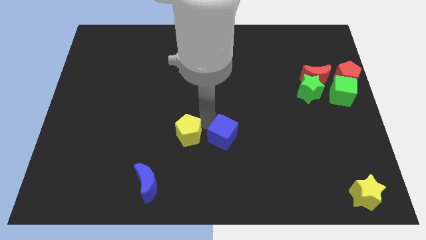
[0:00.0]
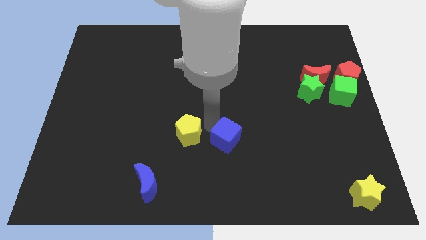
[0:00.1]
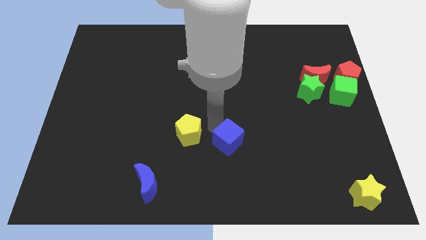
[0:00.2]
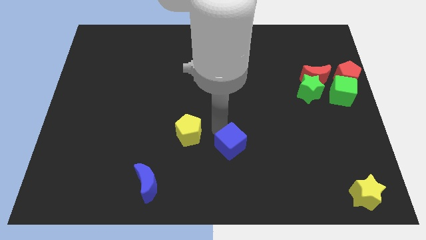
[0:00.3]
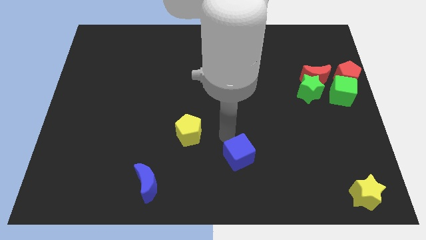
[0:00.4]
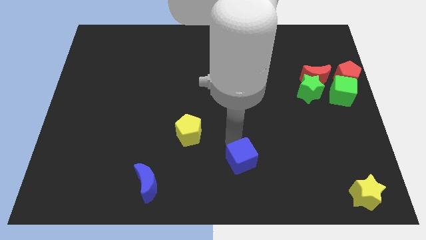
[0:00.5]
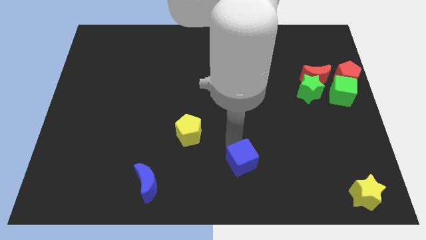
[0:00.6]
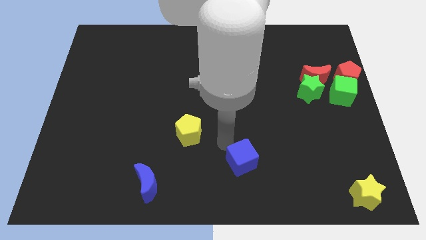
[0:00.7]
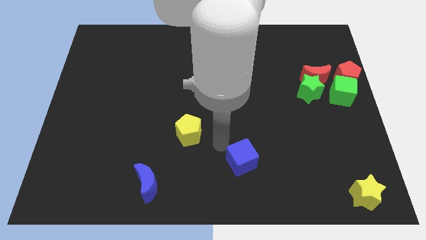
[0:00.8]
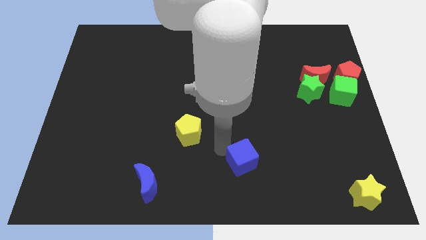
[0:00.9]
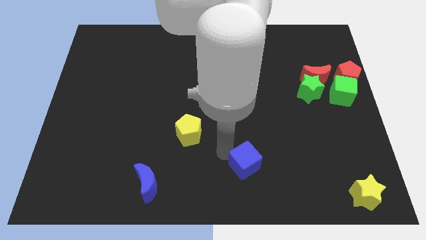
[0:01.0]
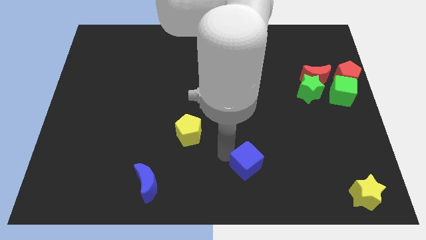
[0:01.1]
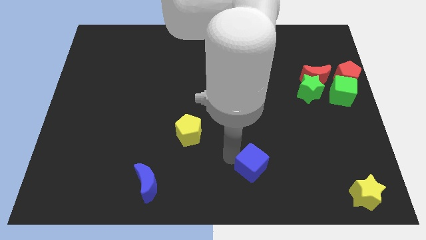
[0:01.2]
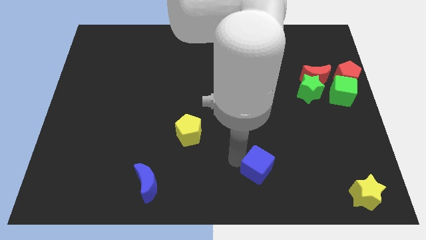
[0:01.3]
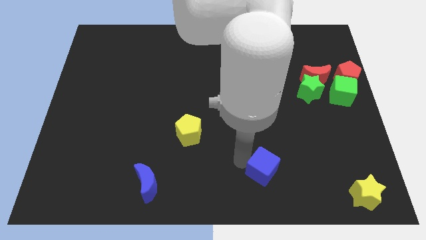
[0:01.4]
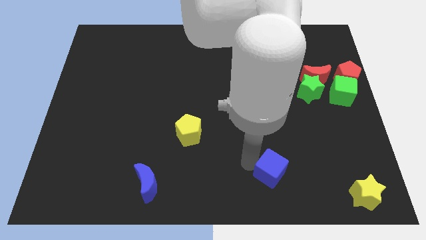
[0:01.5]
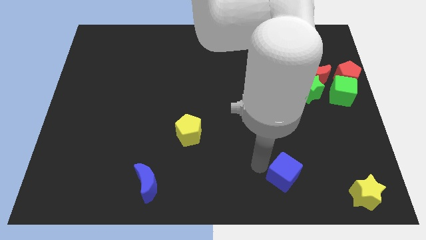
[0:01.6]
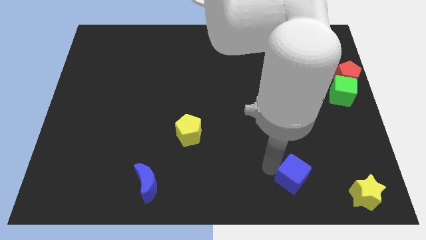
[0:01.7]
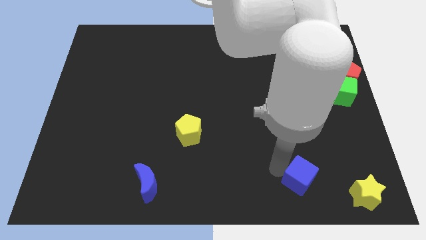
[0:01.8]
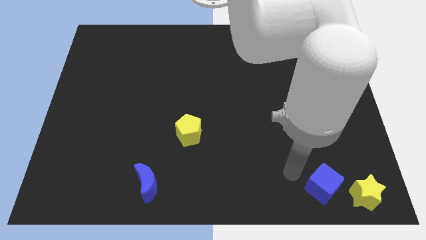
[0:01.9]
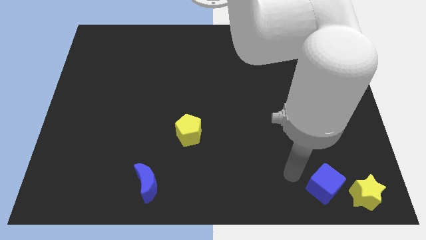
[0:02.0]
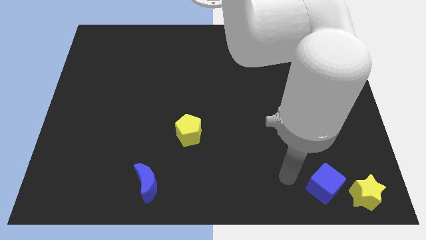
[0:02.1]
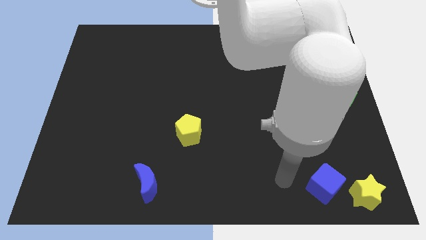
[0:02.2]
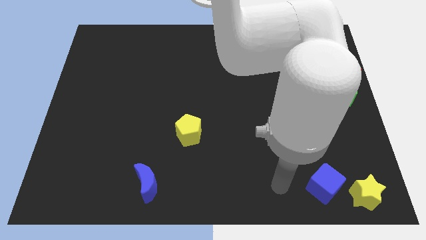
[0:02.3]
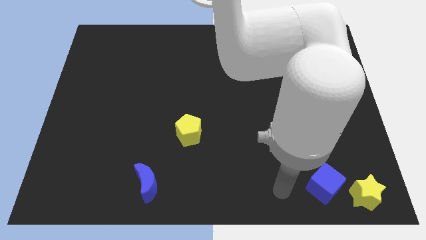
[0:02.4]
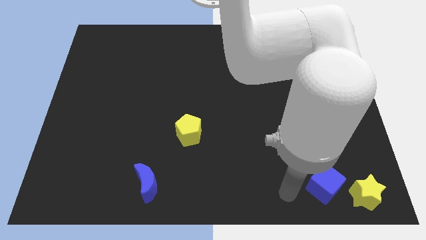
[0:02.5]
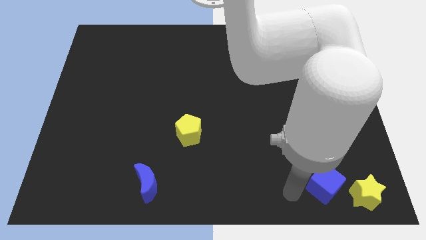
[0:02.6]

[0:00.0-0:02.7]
push the blue cube to the right side of yellow star

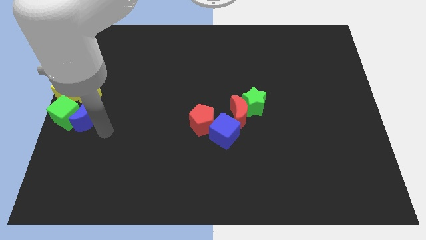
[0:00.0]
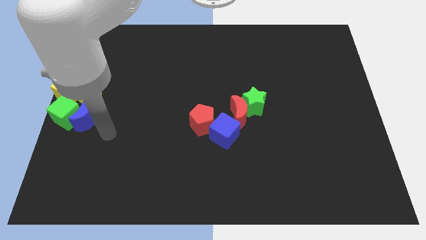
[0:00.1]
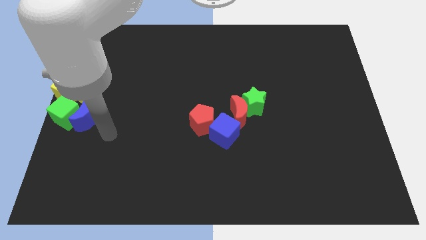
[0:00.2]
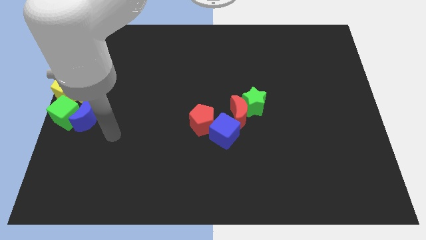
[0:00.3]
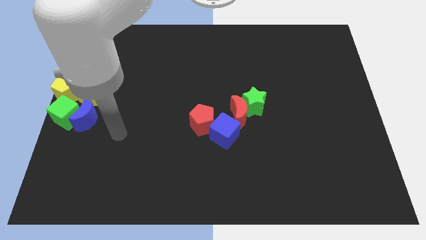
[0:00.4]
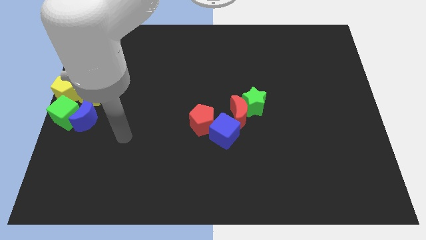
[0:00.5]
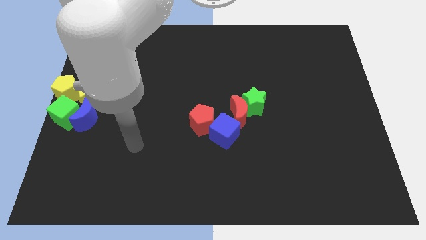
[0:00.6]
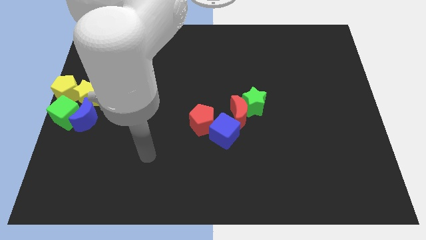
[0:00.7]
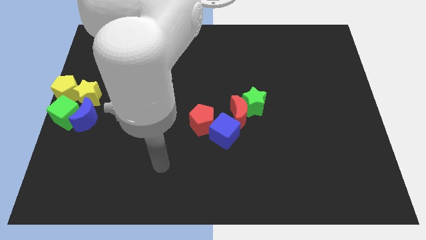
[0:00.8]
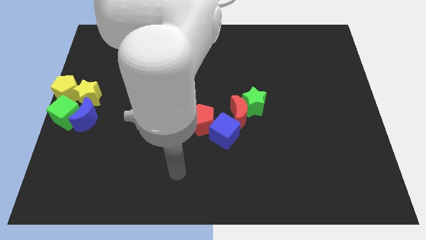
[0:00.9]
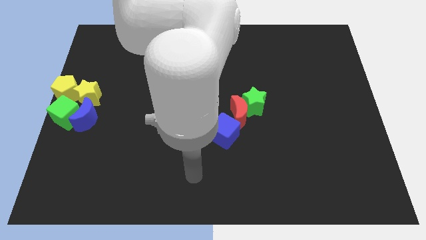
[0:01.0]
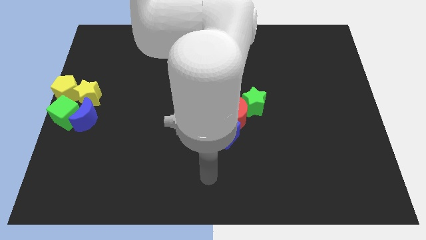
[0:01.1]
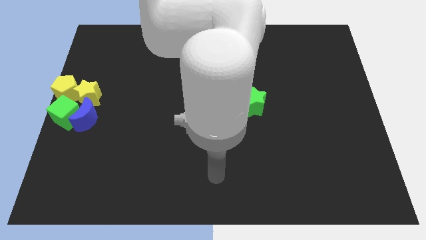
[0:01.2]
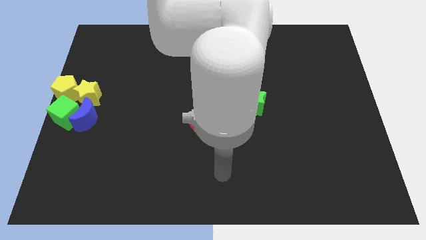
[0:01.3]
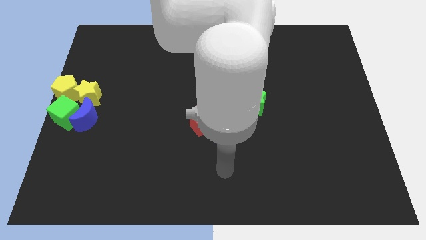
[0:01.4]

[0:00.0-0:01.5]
move your arm bottom of the blue cube

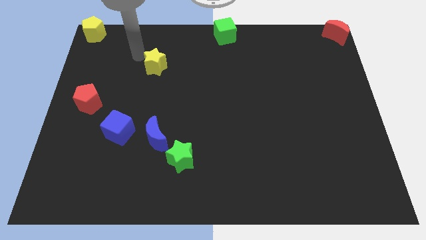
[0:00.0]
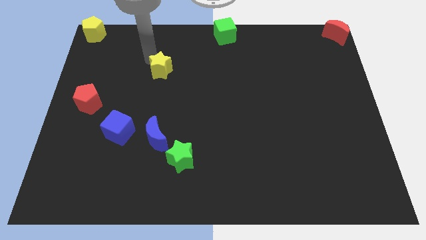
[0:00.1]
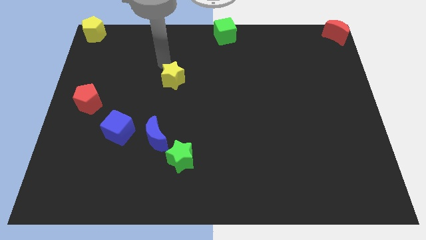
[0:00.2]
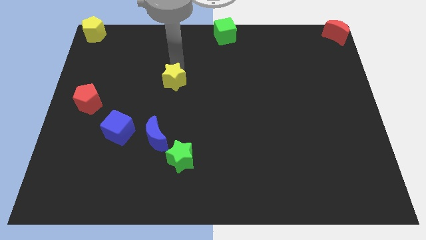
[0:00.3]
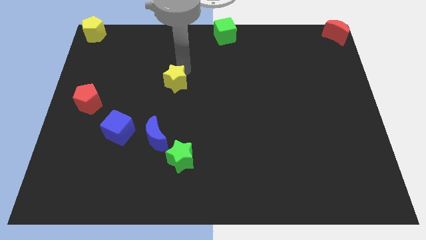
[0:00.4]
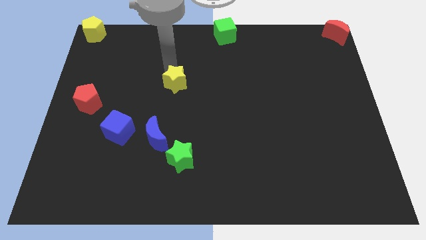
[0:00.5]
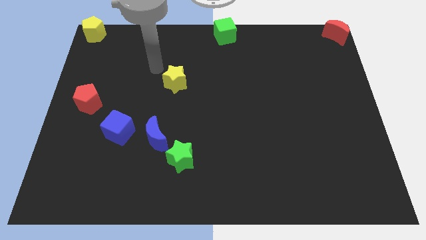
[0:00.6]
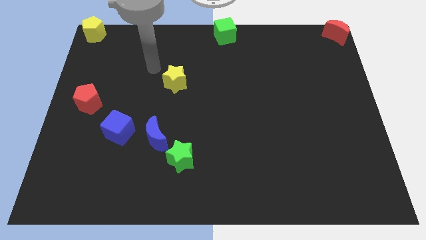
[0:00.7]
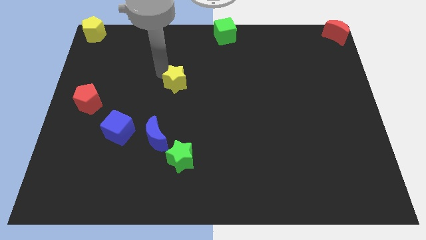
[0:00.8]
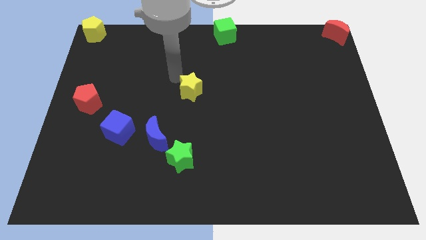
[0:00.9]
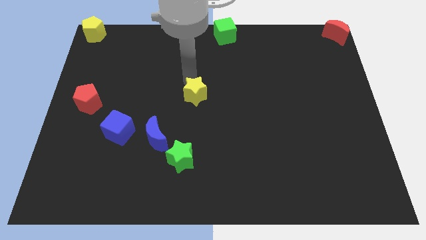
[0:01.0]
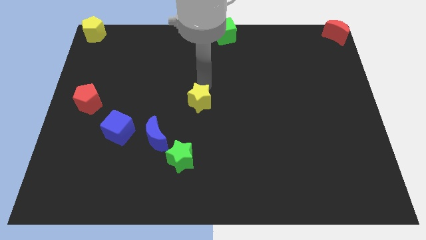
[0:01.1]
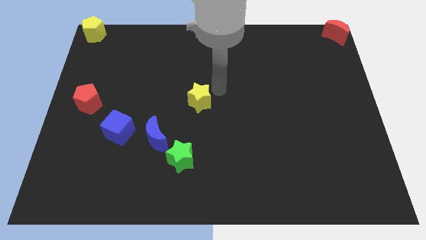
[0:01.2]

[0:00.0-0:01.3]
move the yellow star to the center of the board

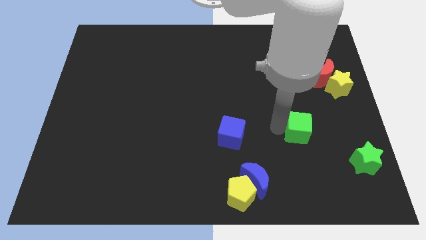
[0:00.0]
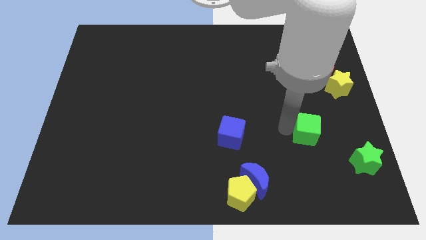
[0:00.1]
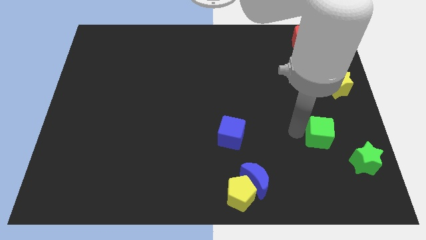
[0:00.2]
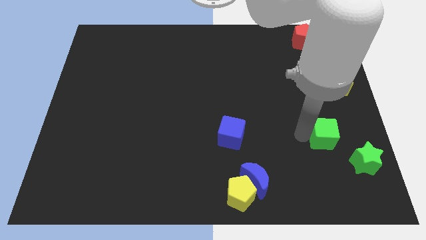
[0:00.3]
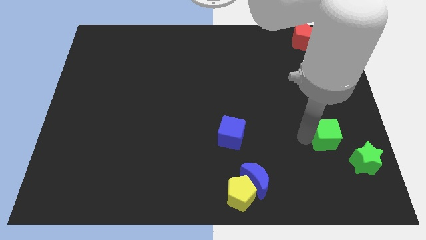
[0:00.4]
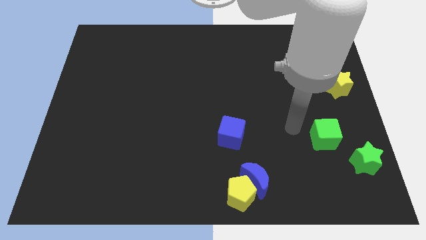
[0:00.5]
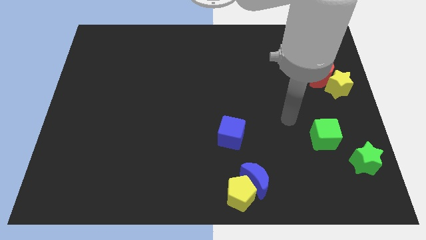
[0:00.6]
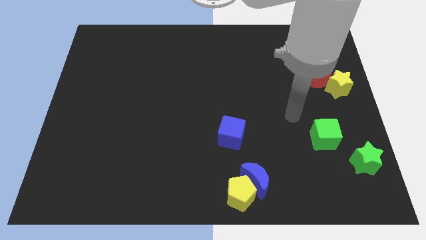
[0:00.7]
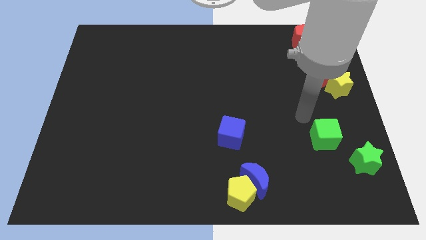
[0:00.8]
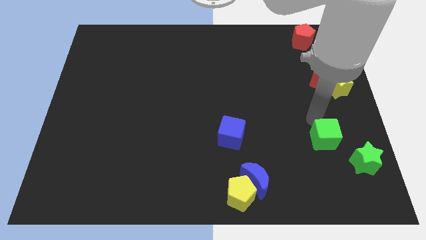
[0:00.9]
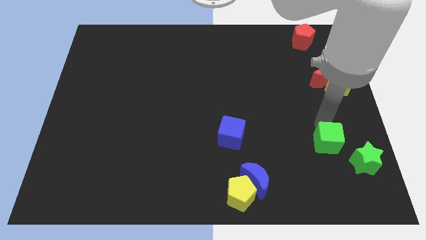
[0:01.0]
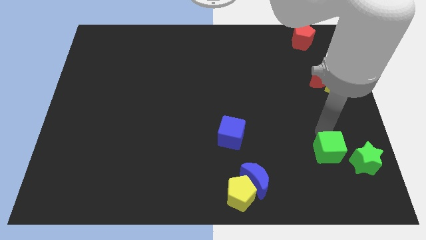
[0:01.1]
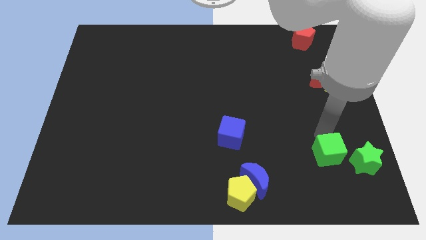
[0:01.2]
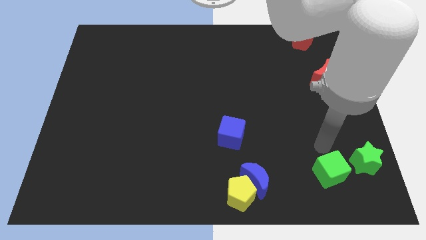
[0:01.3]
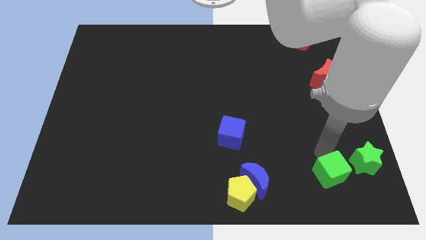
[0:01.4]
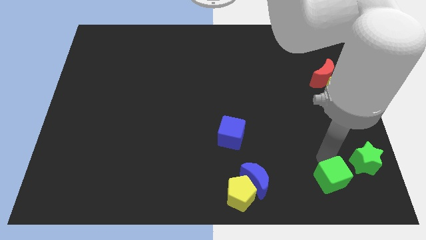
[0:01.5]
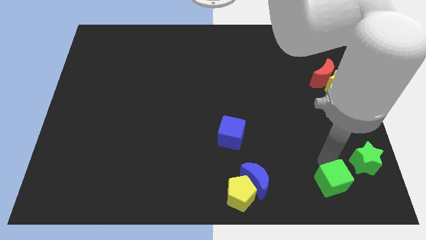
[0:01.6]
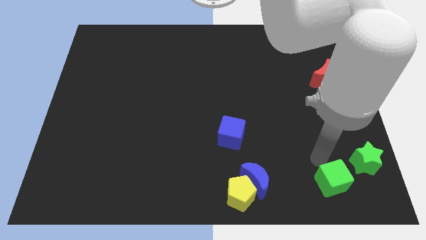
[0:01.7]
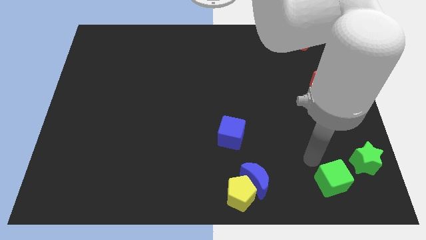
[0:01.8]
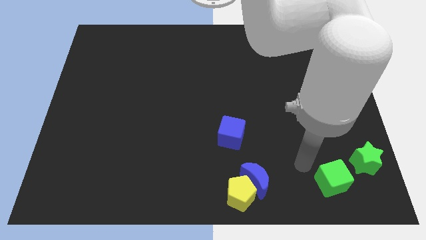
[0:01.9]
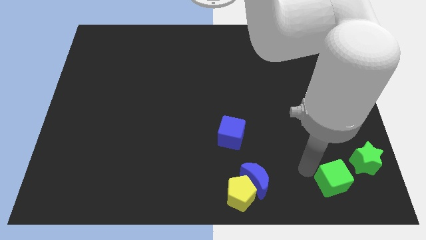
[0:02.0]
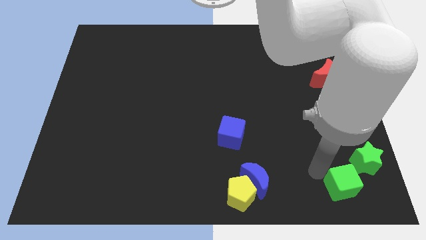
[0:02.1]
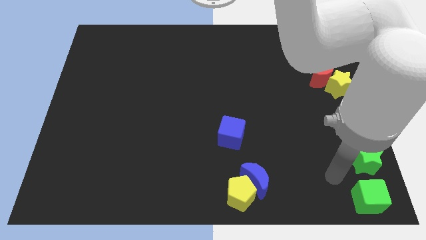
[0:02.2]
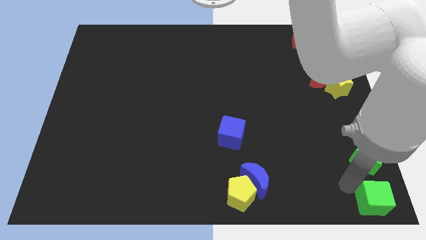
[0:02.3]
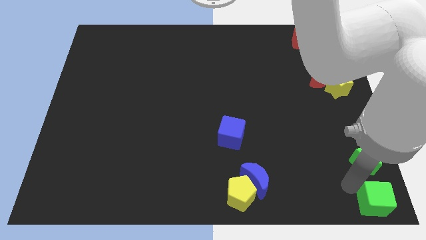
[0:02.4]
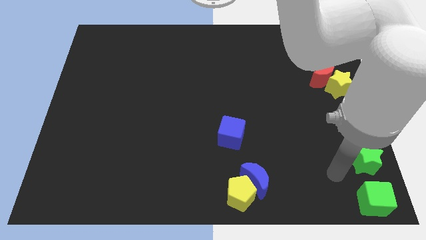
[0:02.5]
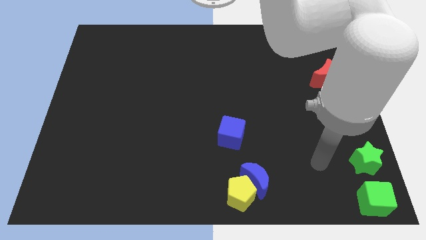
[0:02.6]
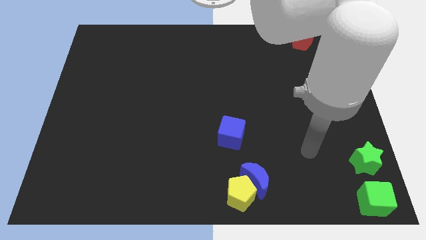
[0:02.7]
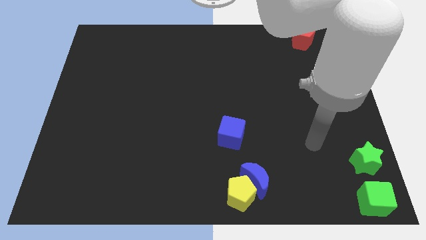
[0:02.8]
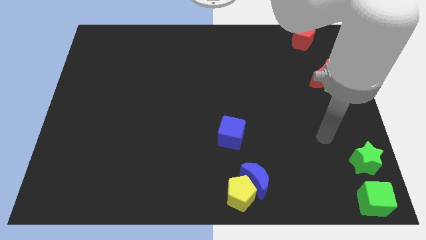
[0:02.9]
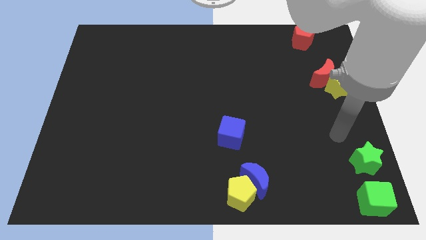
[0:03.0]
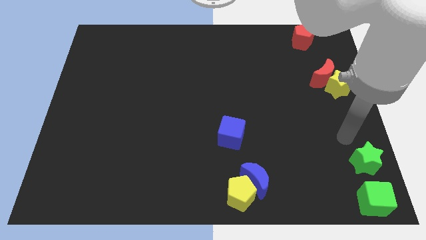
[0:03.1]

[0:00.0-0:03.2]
move green cube to the bottom right corner of the board

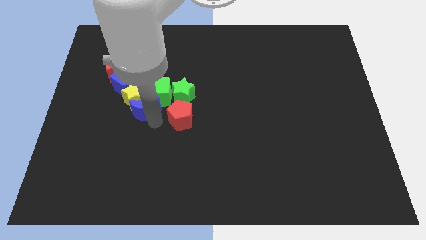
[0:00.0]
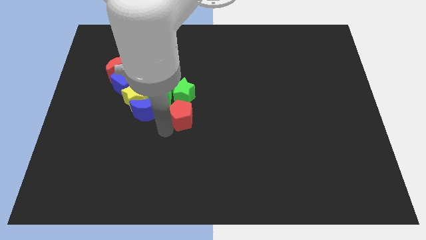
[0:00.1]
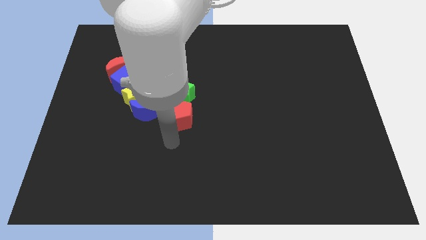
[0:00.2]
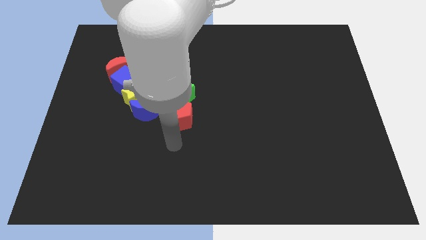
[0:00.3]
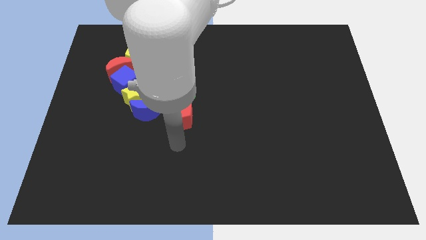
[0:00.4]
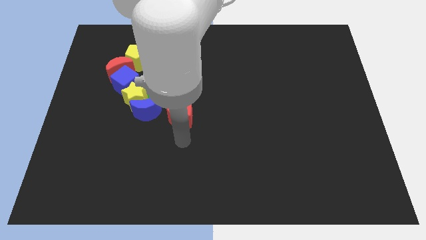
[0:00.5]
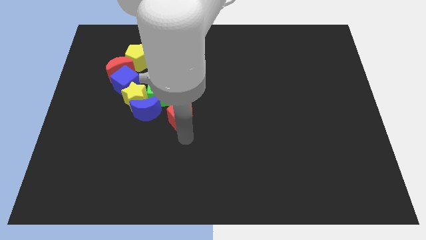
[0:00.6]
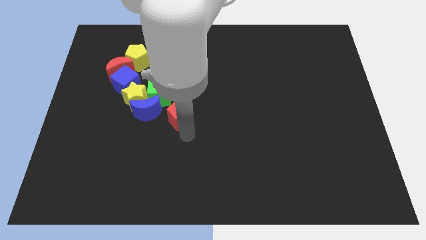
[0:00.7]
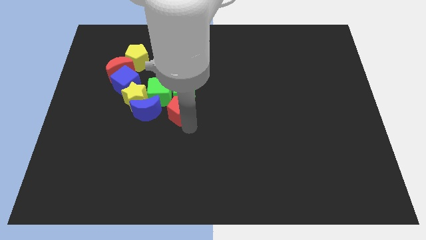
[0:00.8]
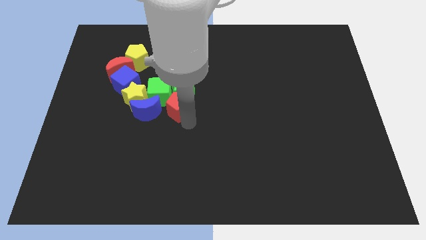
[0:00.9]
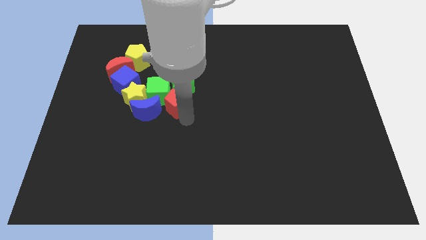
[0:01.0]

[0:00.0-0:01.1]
push the red pentagon slightly to the top
